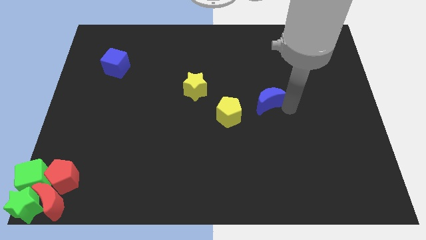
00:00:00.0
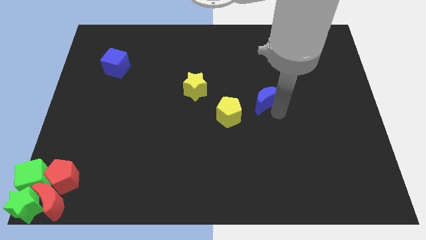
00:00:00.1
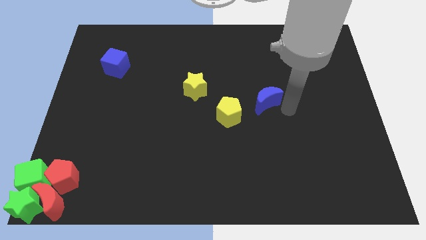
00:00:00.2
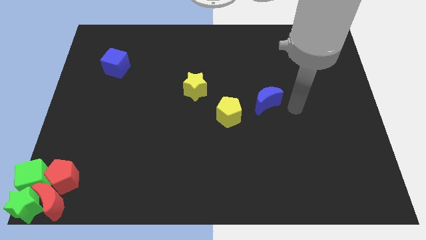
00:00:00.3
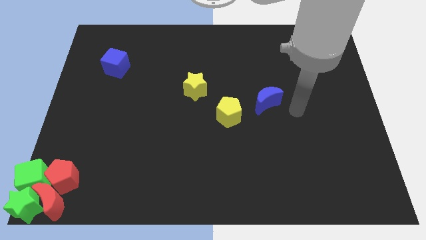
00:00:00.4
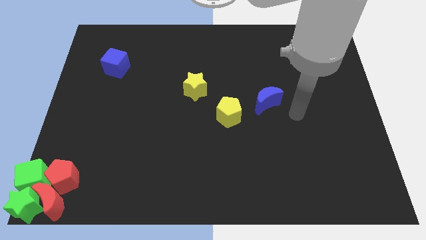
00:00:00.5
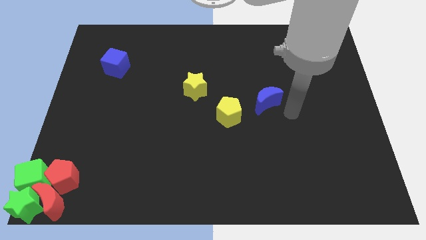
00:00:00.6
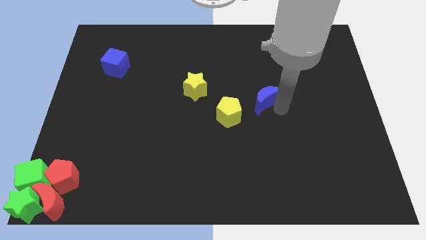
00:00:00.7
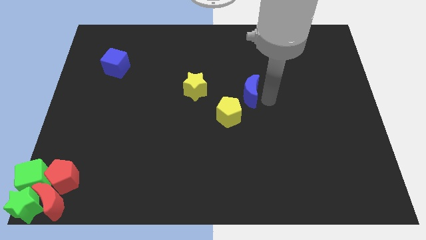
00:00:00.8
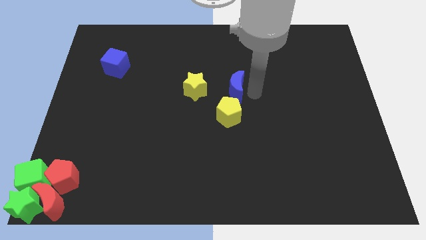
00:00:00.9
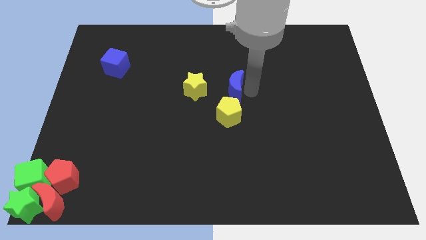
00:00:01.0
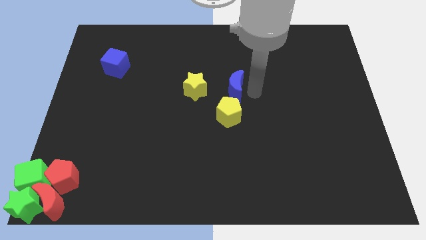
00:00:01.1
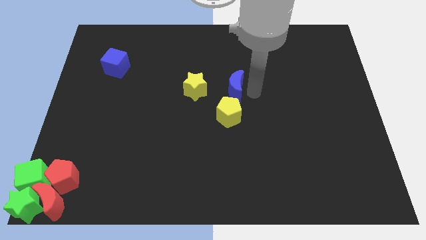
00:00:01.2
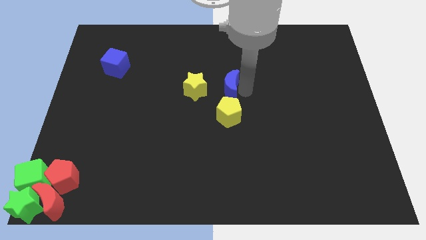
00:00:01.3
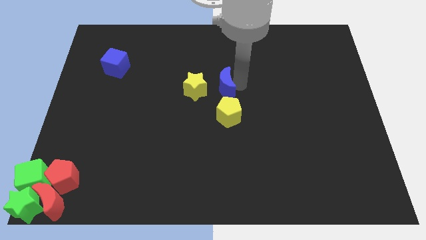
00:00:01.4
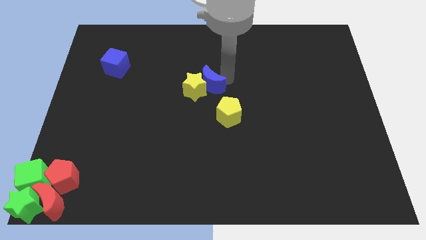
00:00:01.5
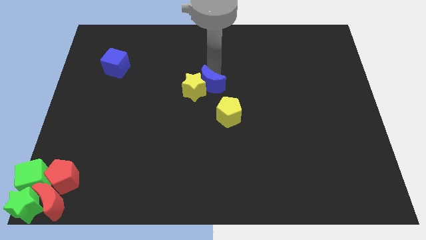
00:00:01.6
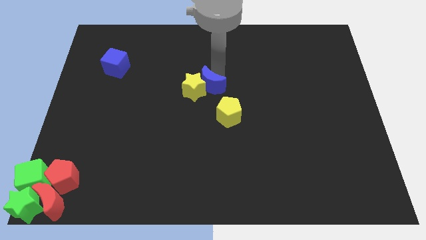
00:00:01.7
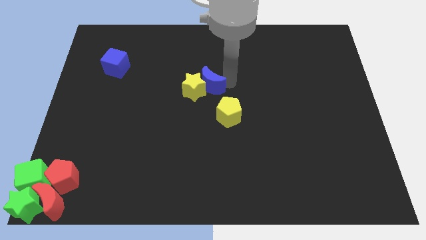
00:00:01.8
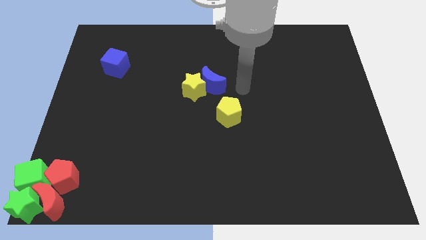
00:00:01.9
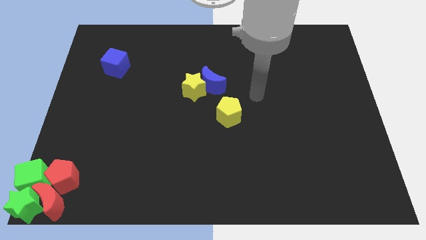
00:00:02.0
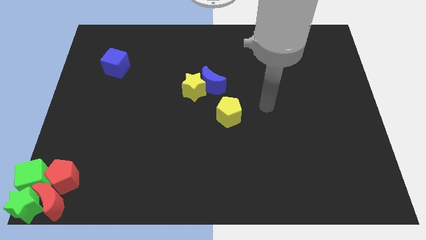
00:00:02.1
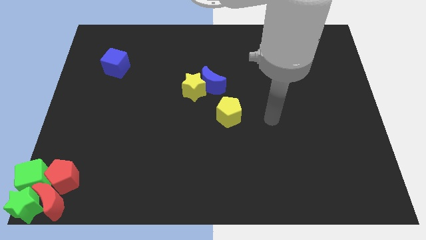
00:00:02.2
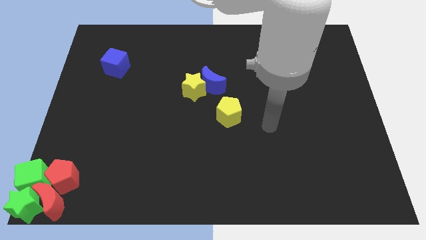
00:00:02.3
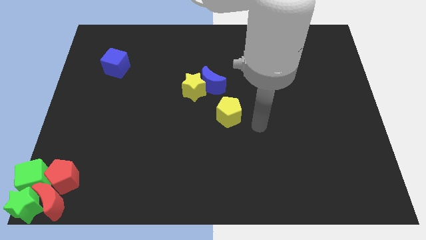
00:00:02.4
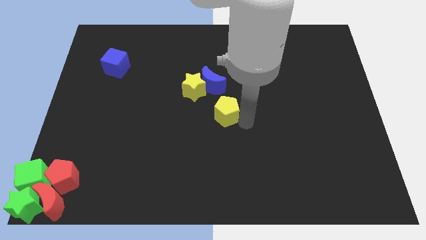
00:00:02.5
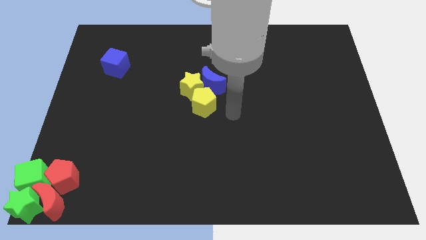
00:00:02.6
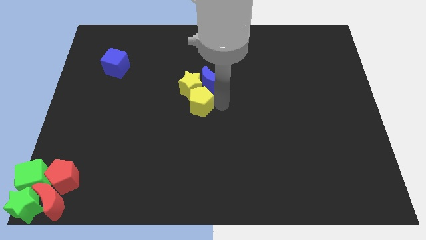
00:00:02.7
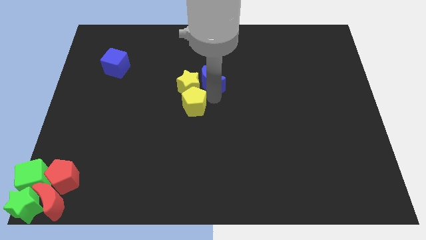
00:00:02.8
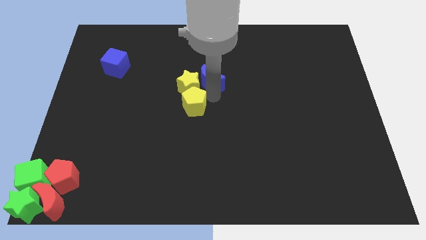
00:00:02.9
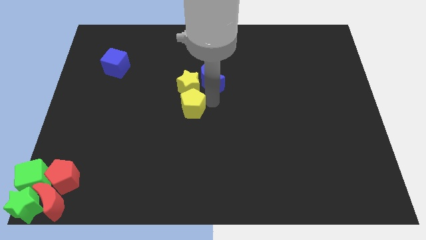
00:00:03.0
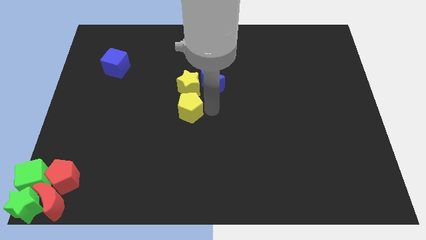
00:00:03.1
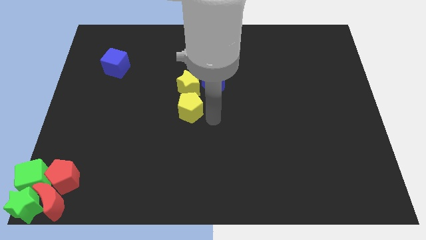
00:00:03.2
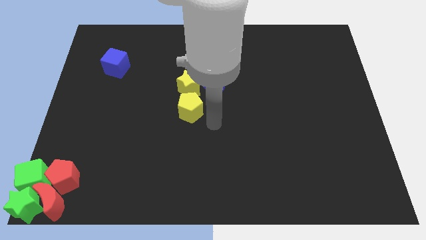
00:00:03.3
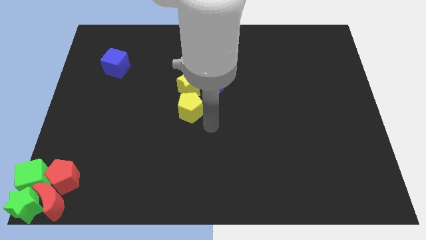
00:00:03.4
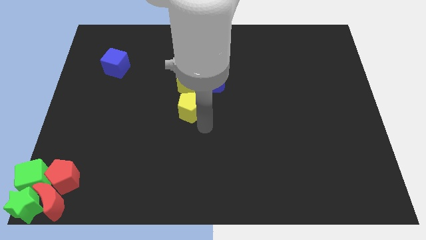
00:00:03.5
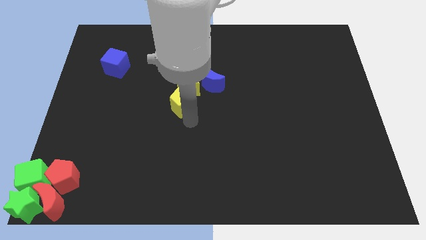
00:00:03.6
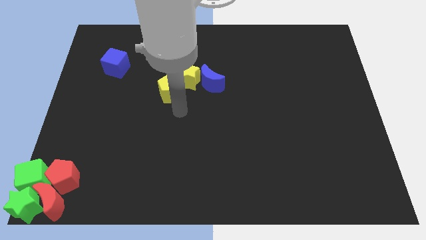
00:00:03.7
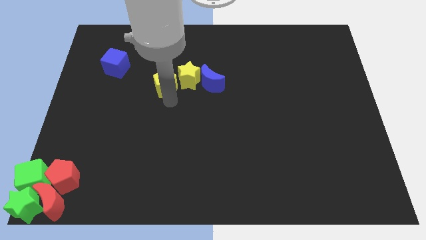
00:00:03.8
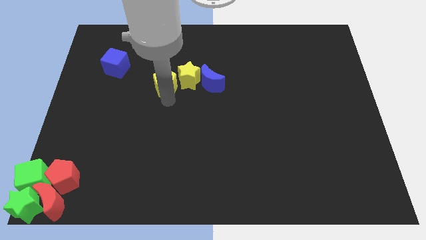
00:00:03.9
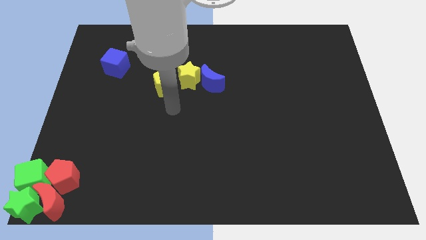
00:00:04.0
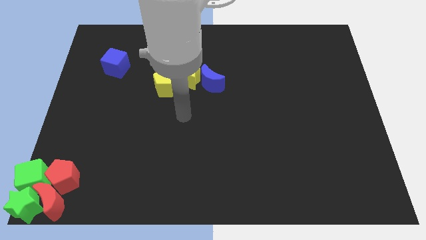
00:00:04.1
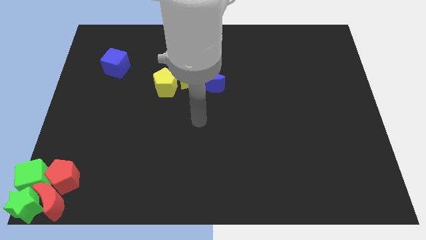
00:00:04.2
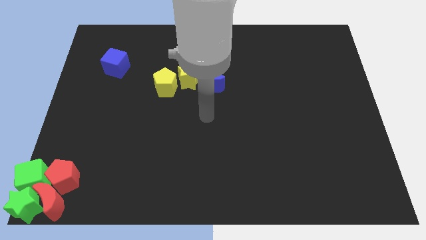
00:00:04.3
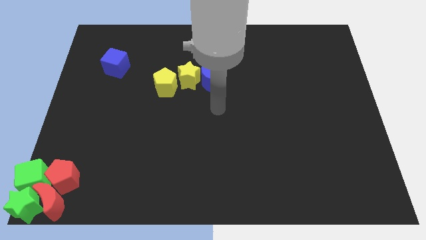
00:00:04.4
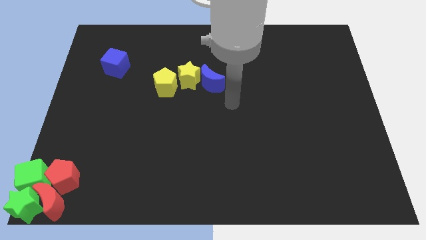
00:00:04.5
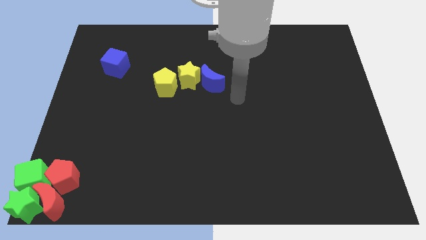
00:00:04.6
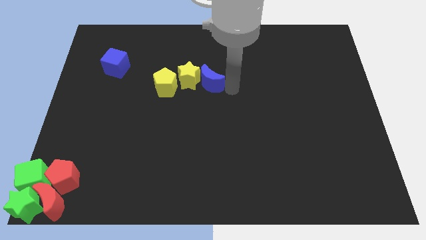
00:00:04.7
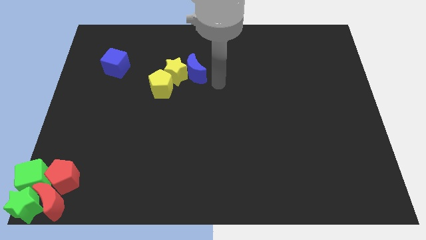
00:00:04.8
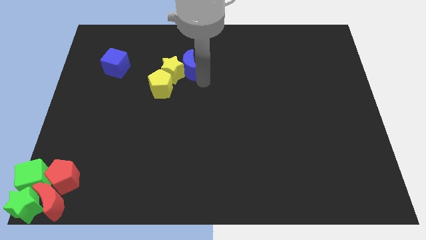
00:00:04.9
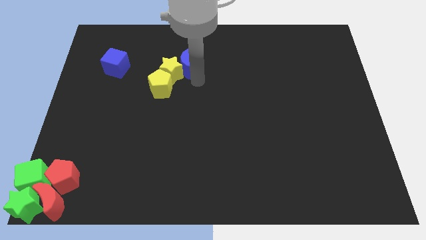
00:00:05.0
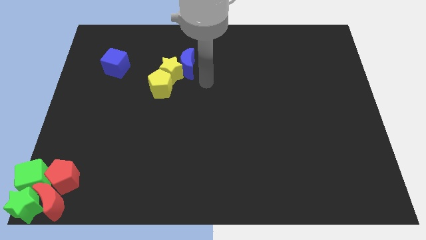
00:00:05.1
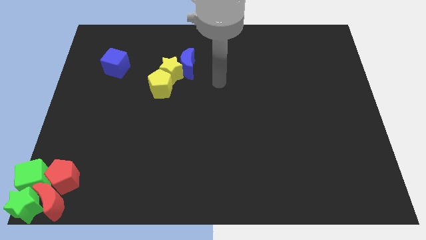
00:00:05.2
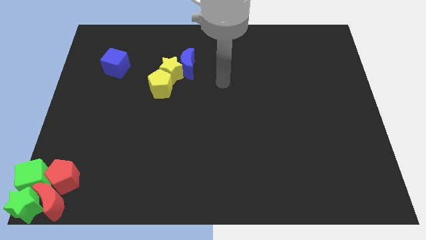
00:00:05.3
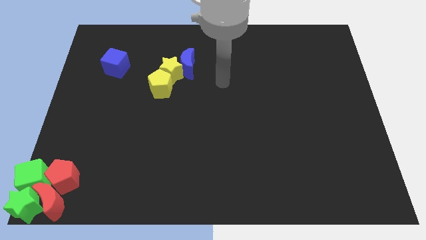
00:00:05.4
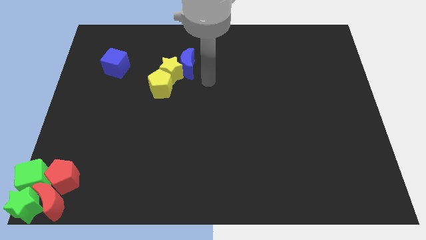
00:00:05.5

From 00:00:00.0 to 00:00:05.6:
push the yellow star yellow pentagon and blue moon towards the left side of the board

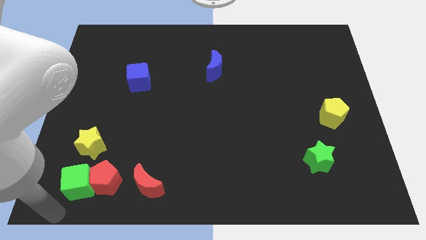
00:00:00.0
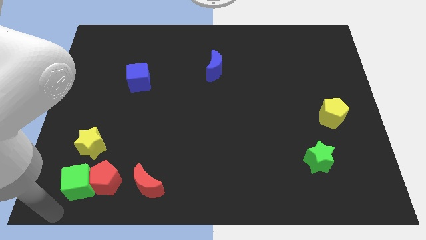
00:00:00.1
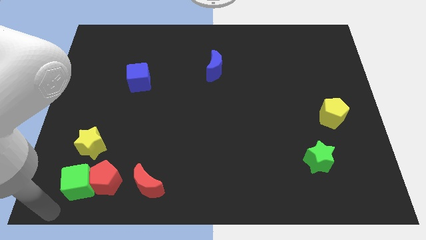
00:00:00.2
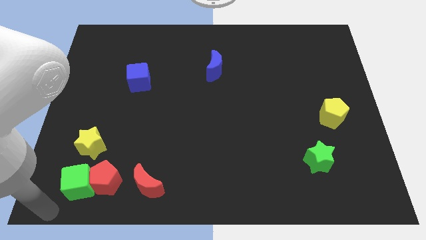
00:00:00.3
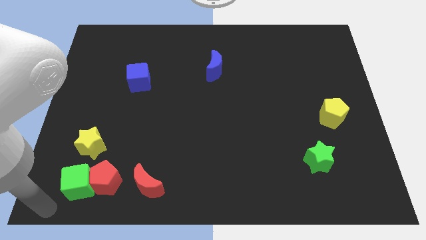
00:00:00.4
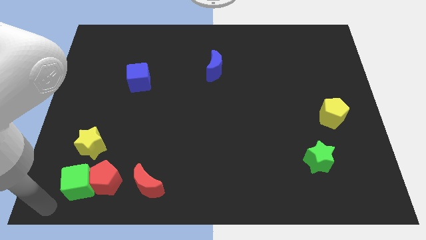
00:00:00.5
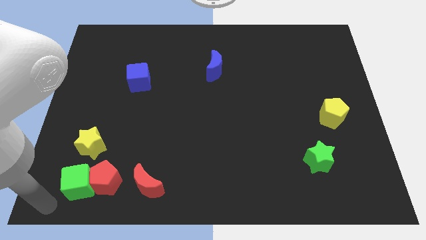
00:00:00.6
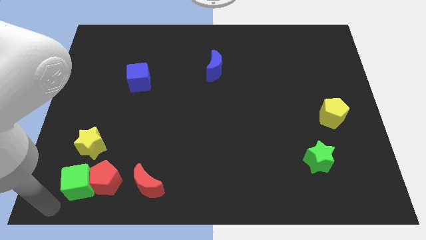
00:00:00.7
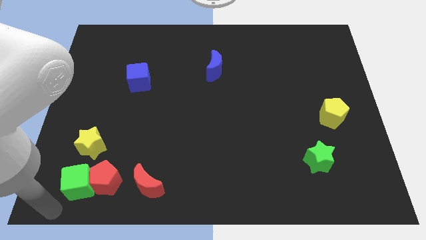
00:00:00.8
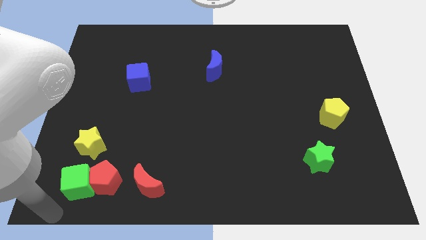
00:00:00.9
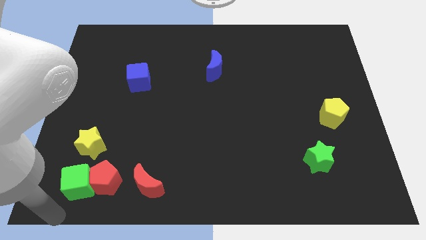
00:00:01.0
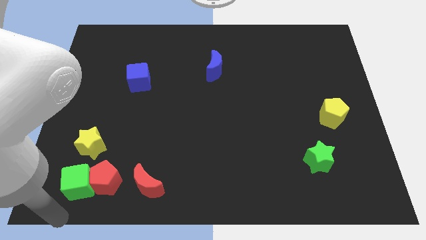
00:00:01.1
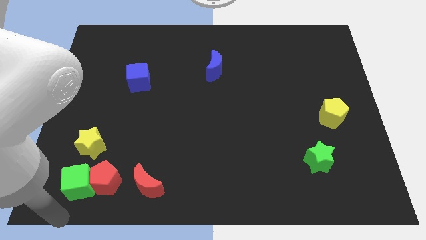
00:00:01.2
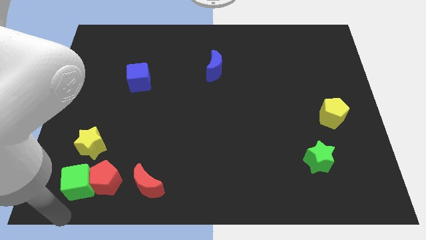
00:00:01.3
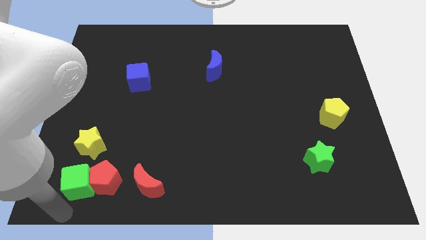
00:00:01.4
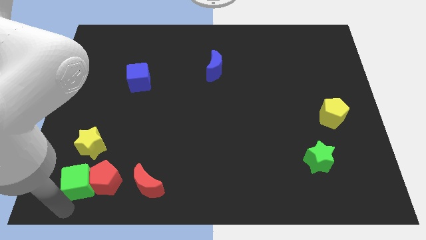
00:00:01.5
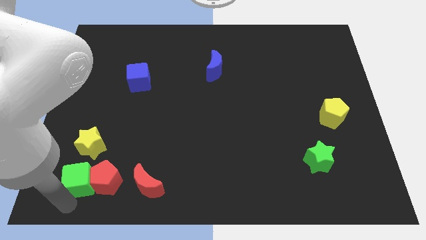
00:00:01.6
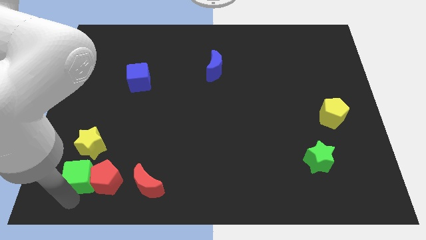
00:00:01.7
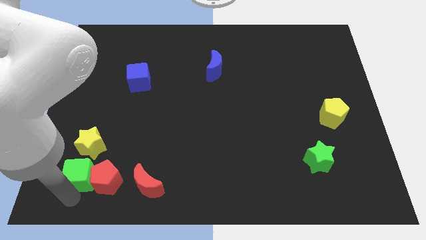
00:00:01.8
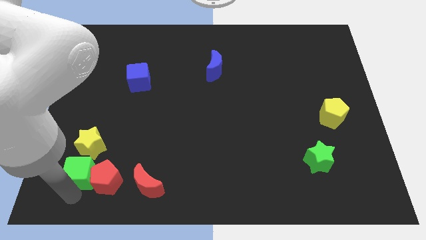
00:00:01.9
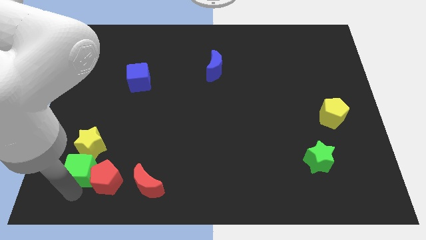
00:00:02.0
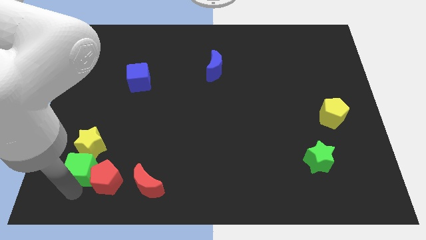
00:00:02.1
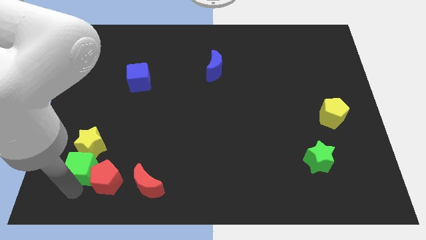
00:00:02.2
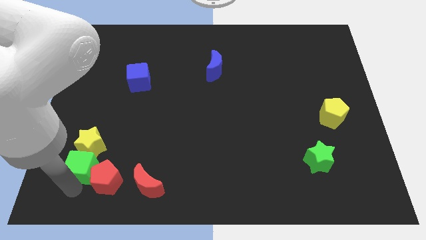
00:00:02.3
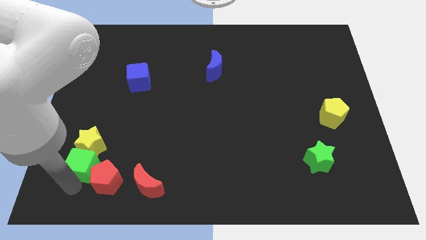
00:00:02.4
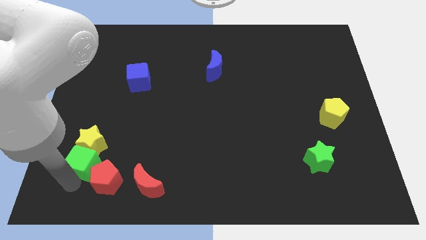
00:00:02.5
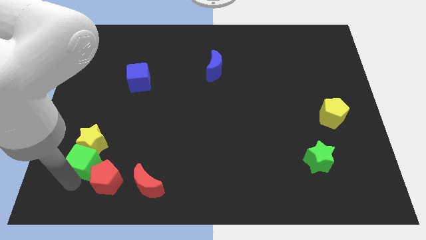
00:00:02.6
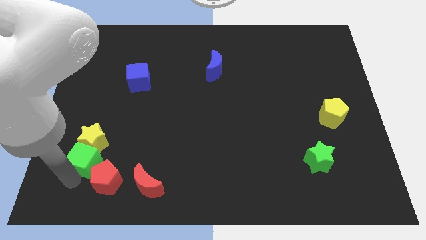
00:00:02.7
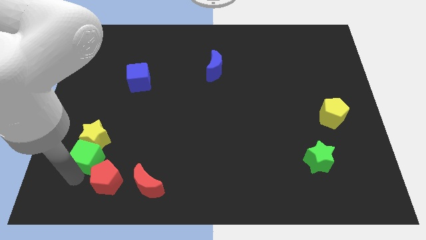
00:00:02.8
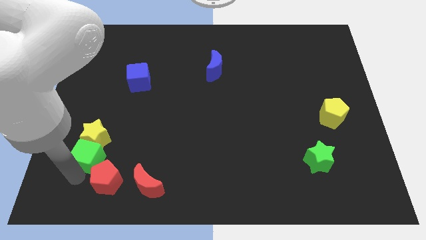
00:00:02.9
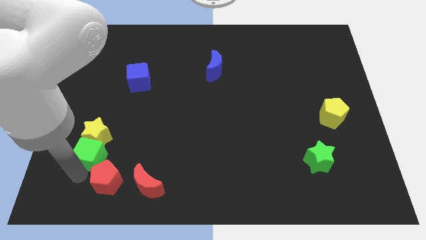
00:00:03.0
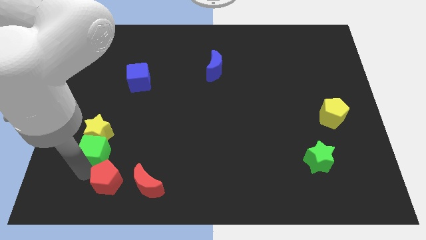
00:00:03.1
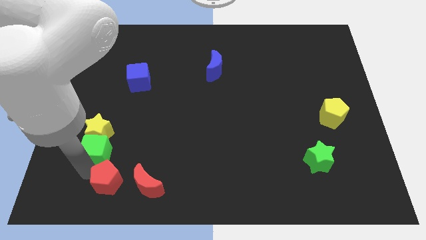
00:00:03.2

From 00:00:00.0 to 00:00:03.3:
push green cube into yellow star
